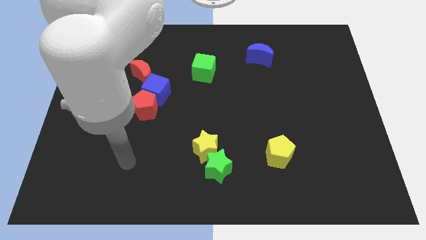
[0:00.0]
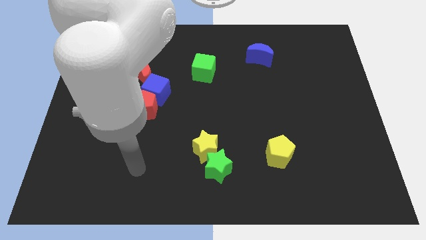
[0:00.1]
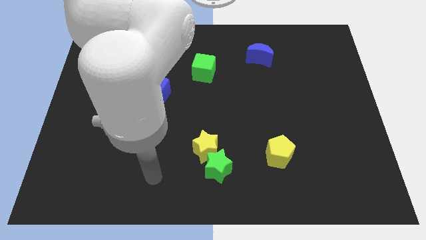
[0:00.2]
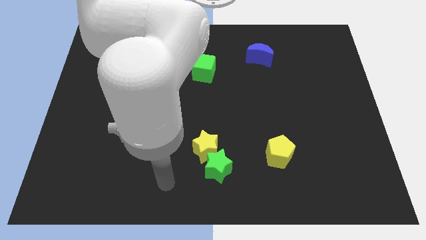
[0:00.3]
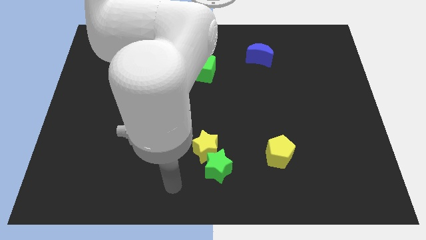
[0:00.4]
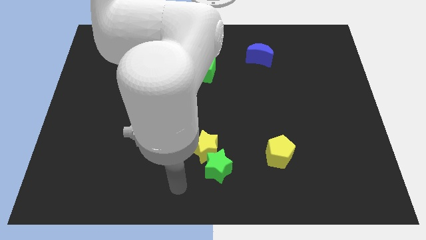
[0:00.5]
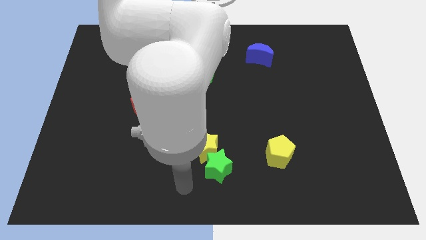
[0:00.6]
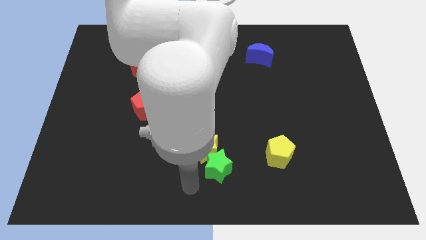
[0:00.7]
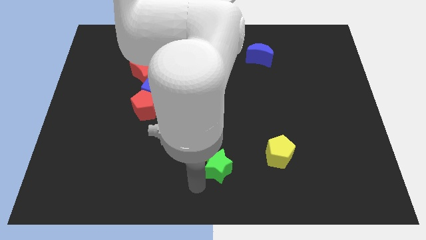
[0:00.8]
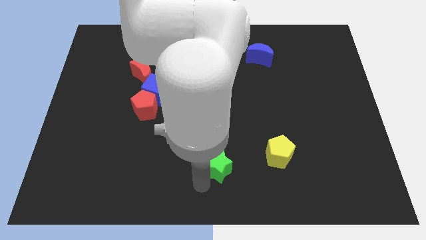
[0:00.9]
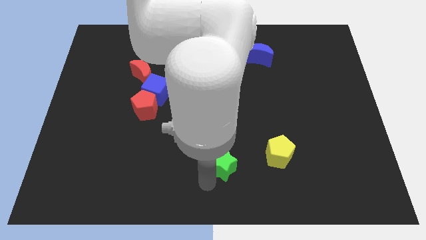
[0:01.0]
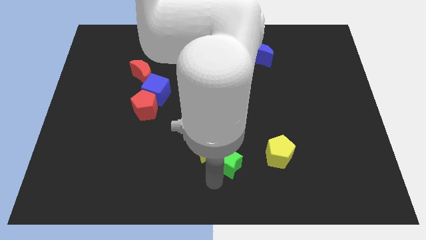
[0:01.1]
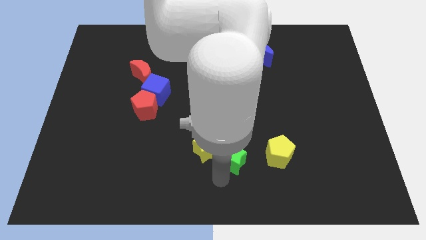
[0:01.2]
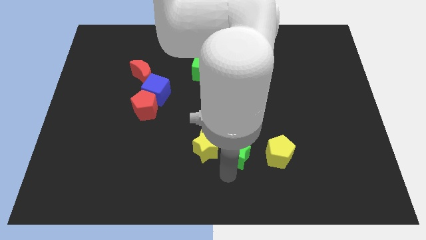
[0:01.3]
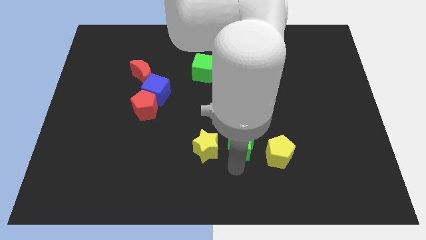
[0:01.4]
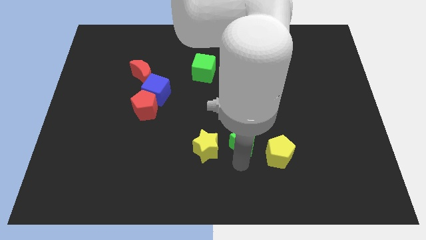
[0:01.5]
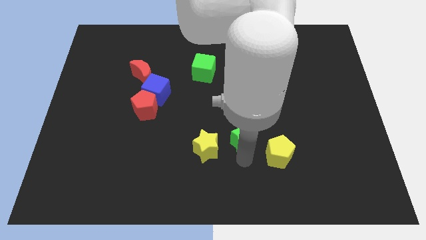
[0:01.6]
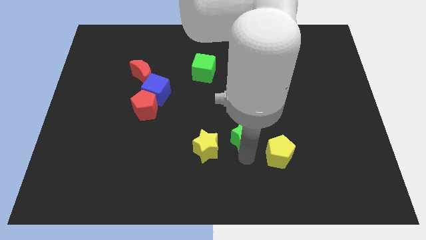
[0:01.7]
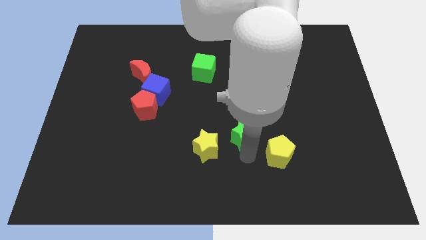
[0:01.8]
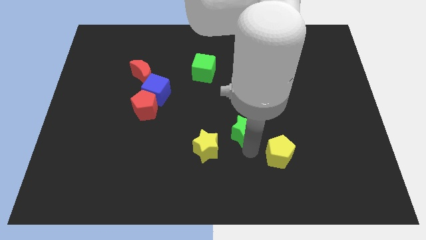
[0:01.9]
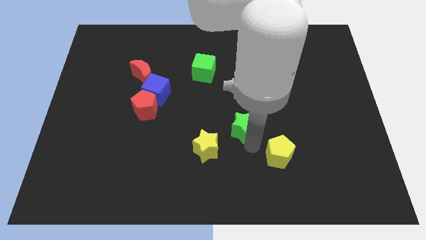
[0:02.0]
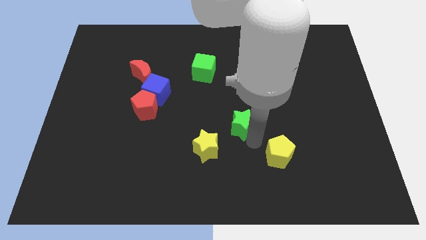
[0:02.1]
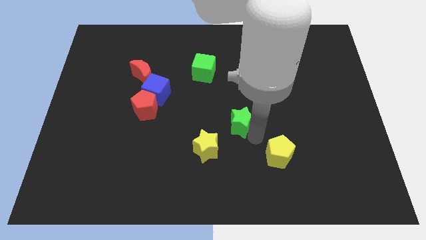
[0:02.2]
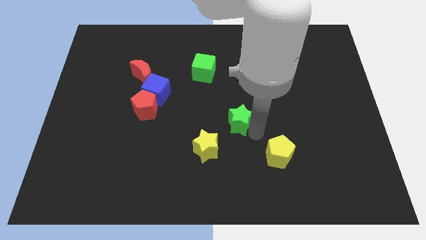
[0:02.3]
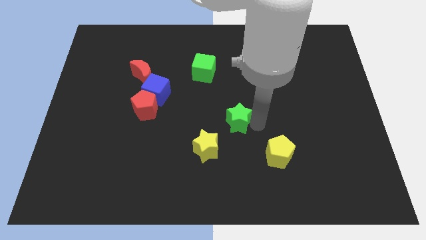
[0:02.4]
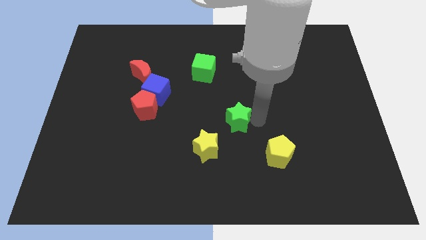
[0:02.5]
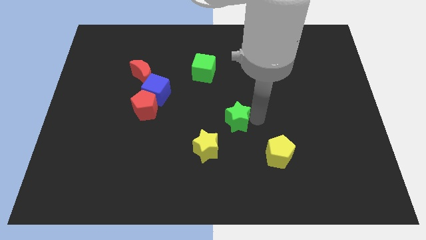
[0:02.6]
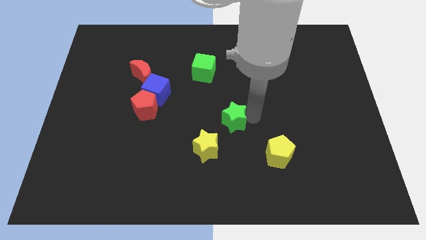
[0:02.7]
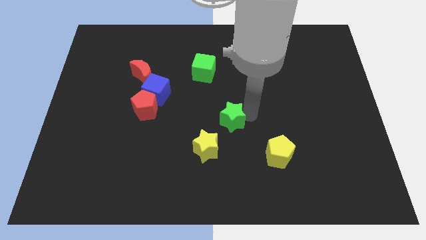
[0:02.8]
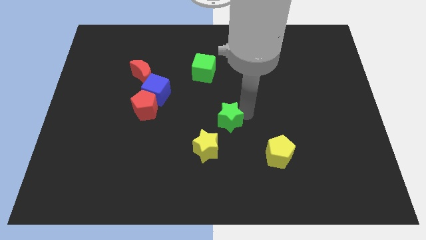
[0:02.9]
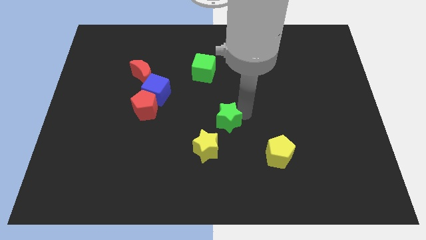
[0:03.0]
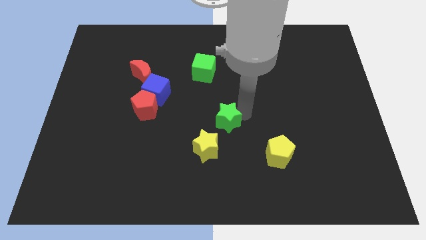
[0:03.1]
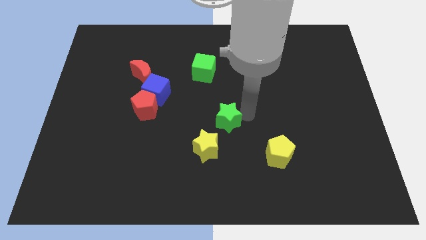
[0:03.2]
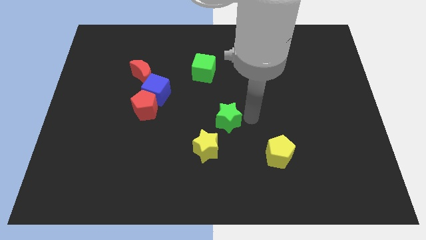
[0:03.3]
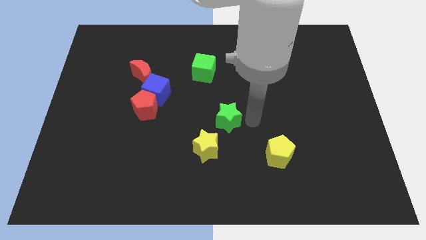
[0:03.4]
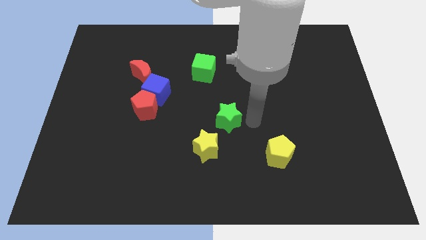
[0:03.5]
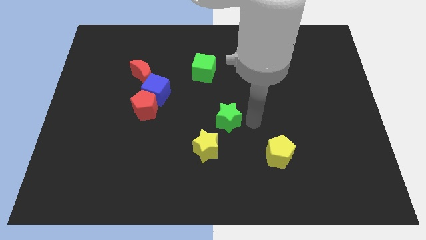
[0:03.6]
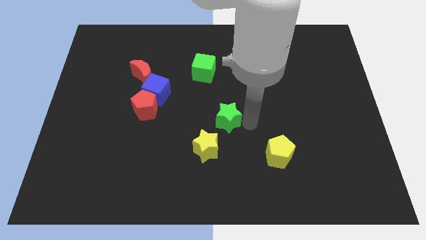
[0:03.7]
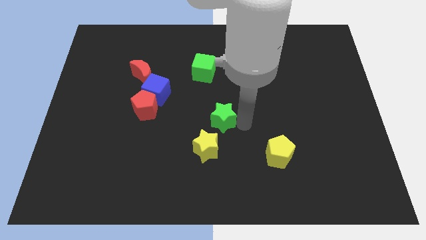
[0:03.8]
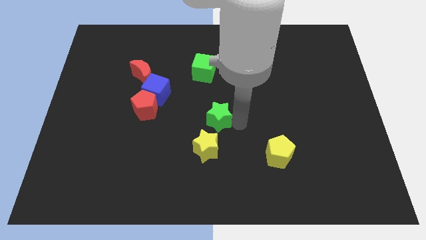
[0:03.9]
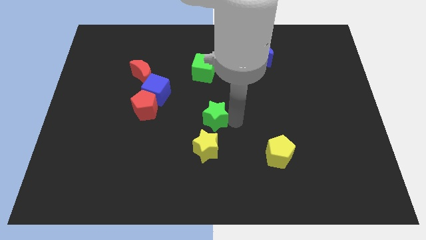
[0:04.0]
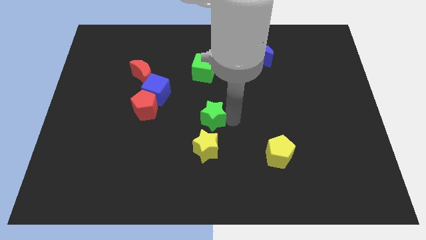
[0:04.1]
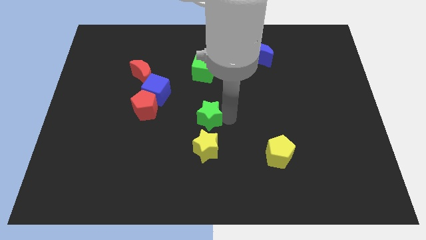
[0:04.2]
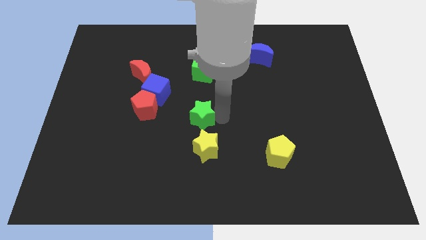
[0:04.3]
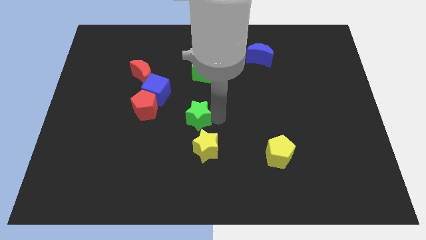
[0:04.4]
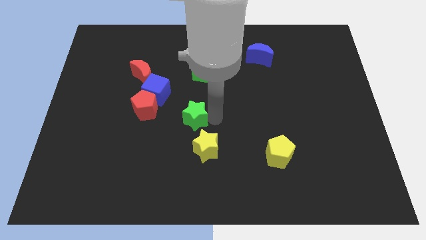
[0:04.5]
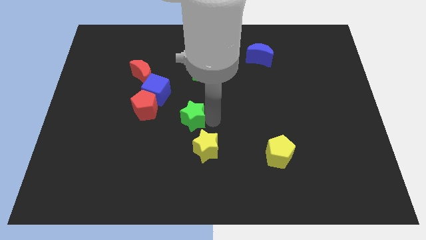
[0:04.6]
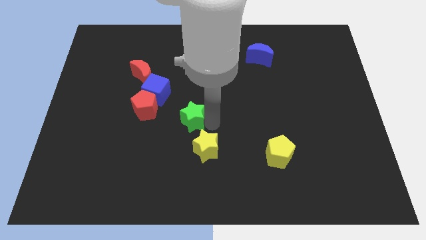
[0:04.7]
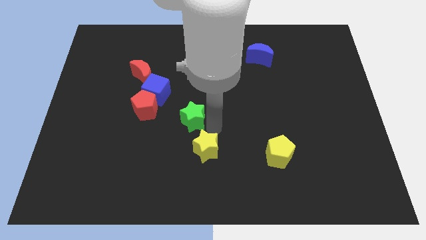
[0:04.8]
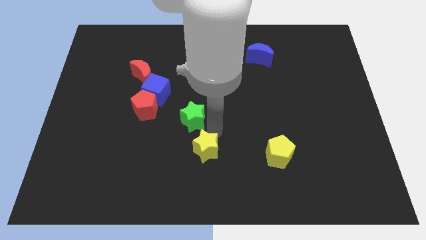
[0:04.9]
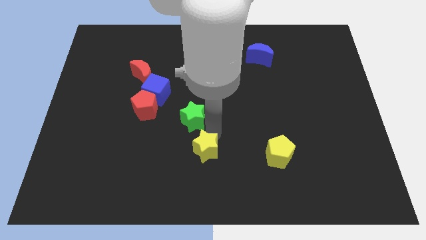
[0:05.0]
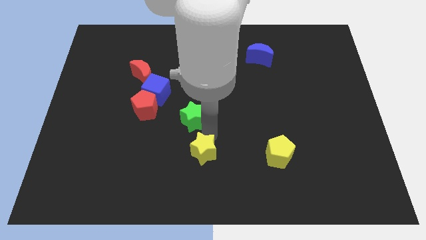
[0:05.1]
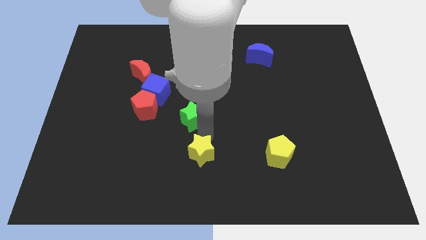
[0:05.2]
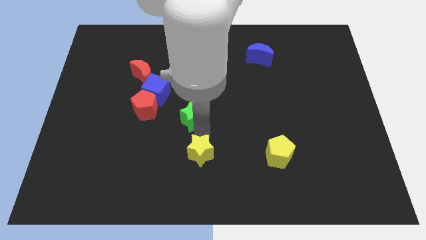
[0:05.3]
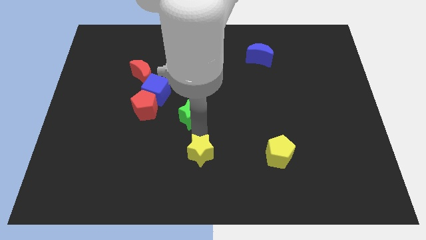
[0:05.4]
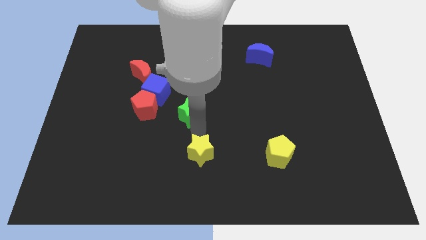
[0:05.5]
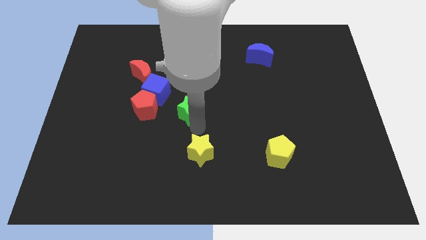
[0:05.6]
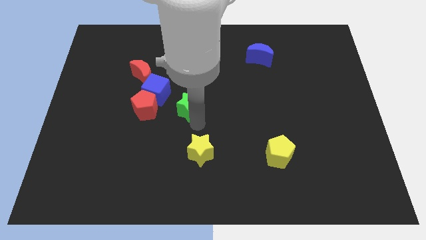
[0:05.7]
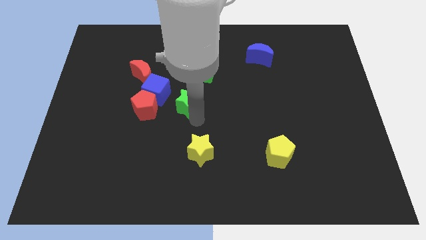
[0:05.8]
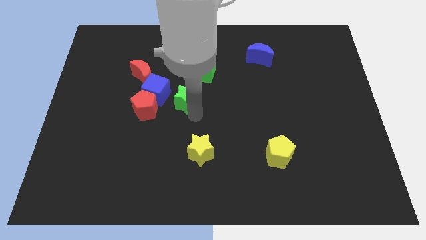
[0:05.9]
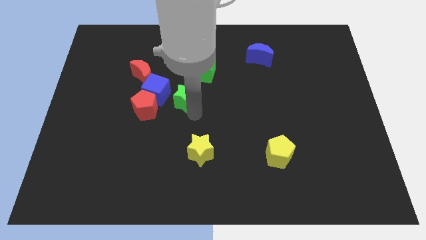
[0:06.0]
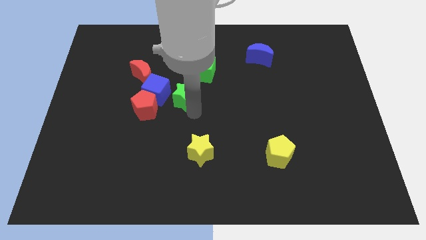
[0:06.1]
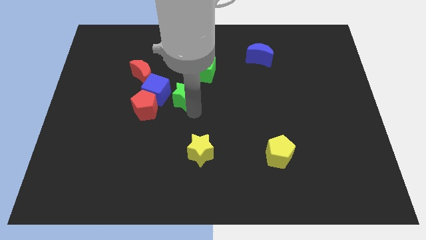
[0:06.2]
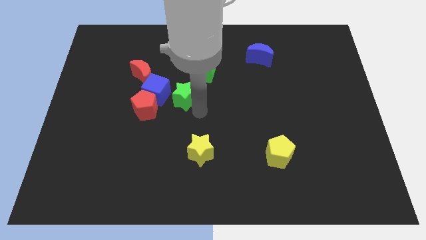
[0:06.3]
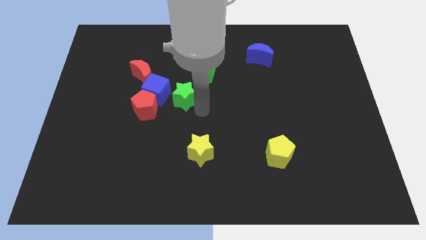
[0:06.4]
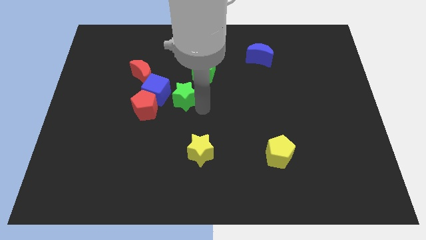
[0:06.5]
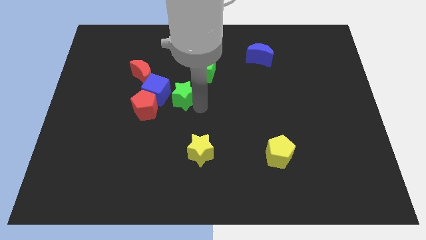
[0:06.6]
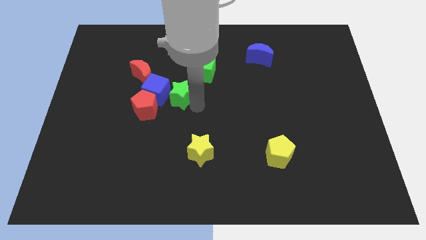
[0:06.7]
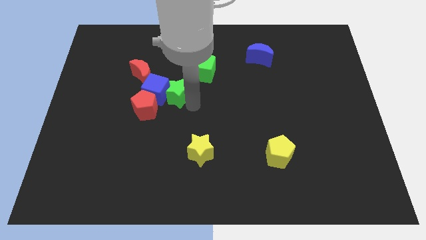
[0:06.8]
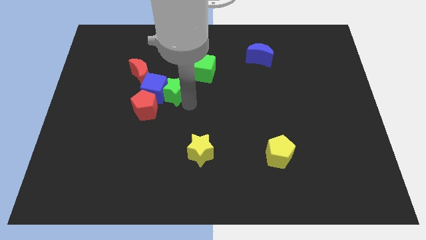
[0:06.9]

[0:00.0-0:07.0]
slide the green star to the blue cube

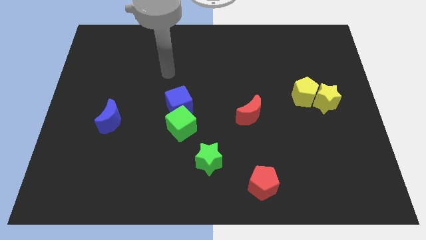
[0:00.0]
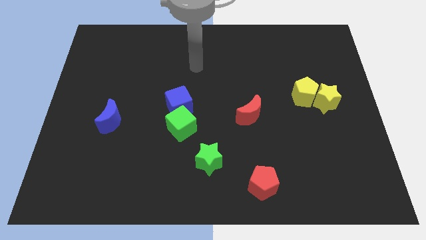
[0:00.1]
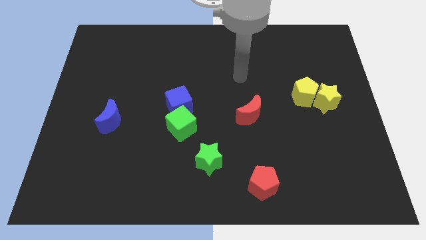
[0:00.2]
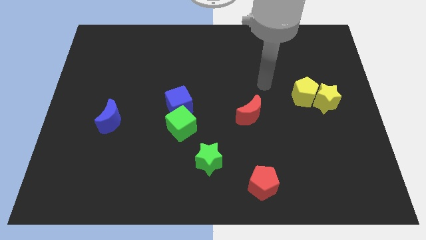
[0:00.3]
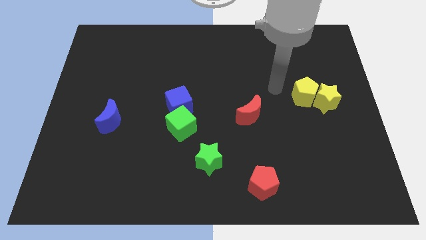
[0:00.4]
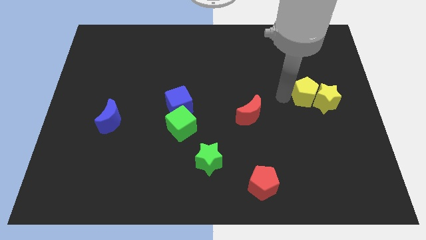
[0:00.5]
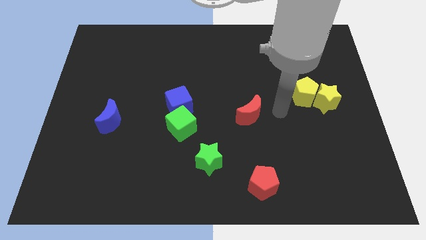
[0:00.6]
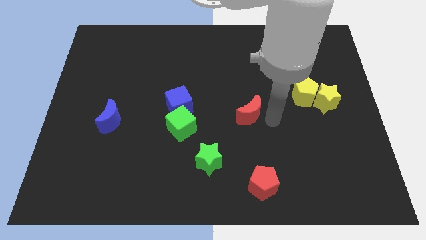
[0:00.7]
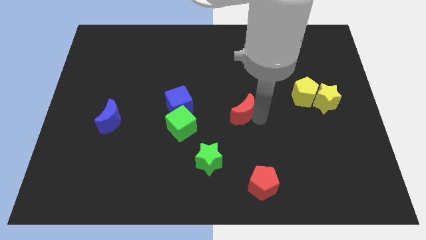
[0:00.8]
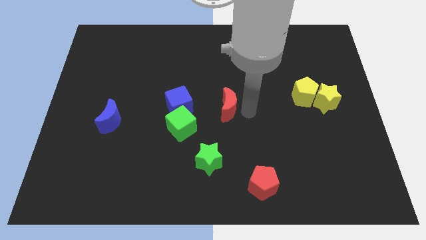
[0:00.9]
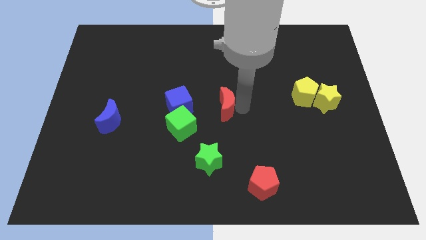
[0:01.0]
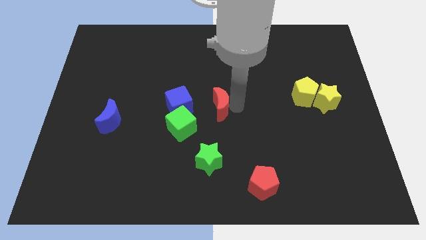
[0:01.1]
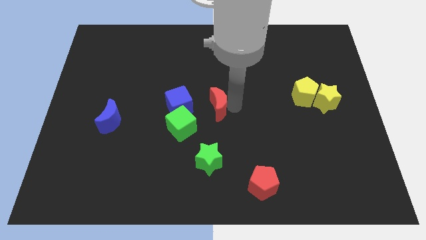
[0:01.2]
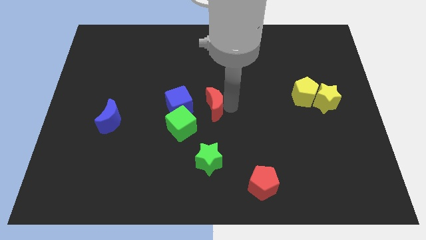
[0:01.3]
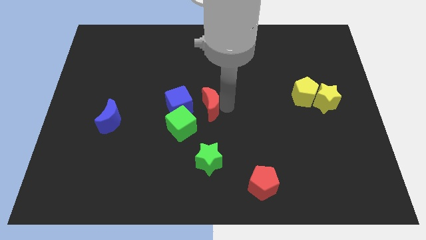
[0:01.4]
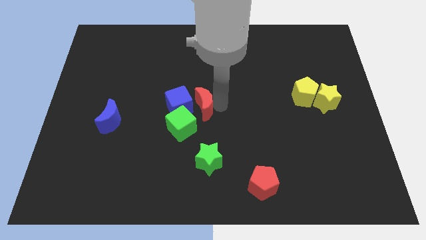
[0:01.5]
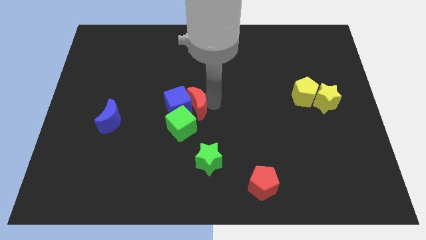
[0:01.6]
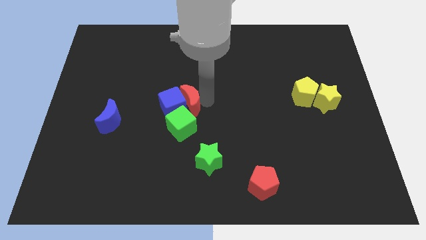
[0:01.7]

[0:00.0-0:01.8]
push the red moon close to the blue cube
